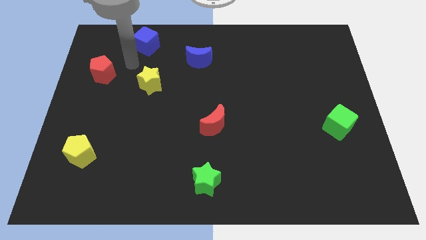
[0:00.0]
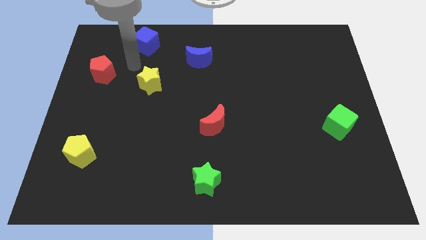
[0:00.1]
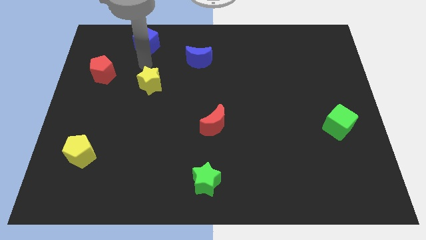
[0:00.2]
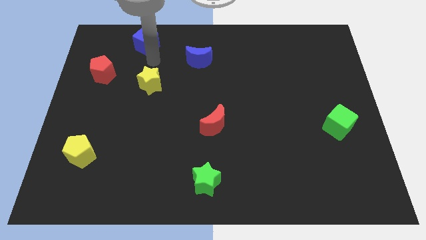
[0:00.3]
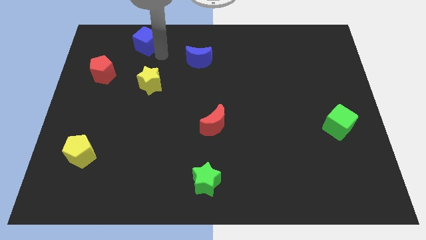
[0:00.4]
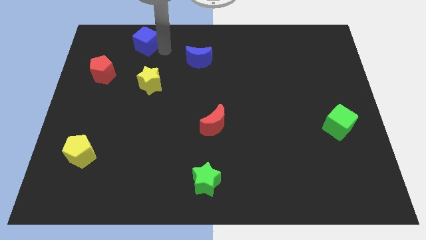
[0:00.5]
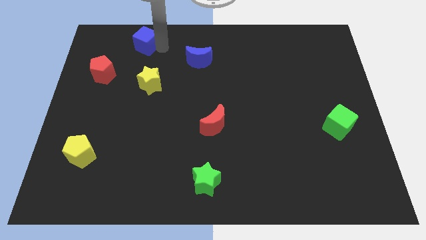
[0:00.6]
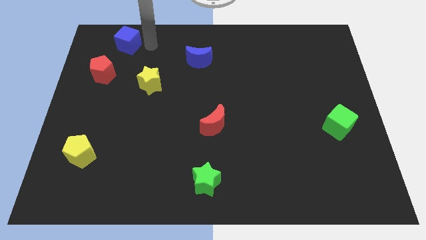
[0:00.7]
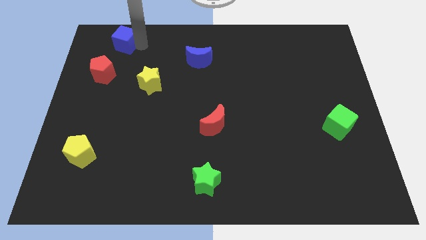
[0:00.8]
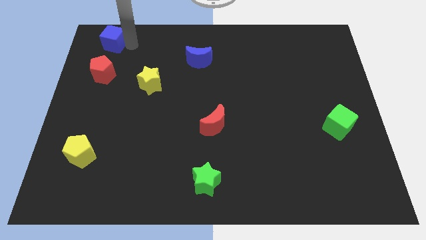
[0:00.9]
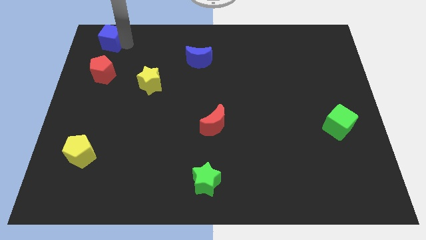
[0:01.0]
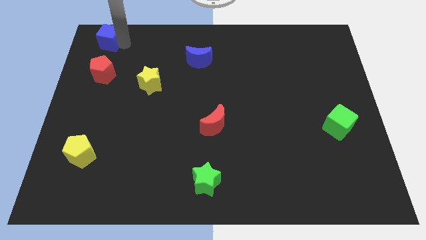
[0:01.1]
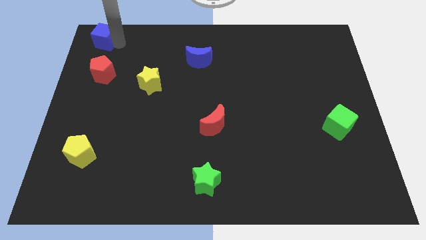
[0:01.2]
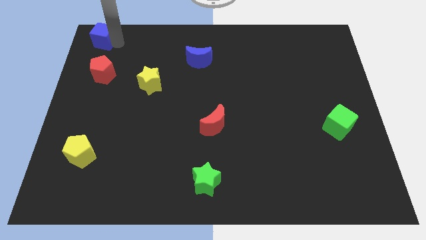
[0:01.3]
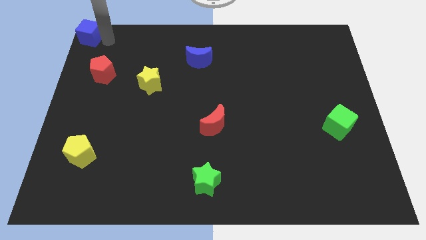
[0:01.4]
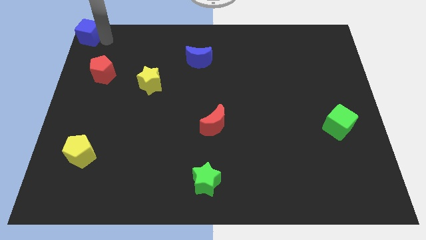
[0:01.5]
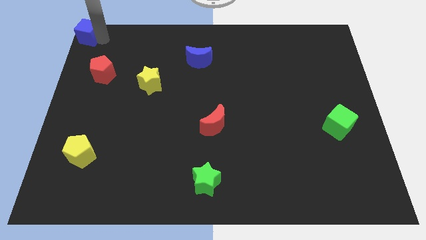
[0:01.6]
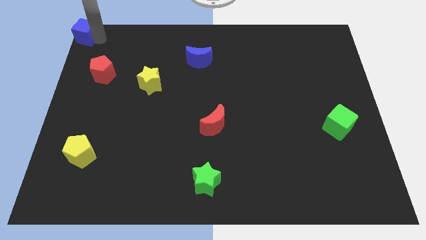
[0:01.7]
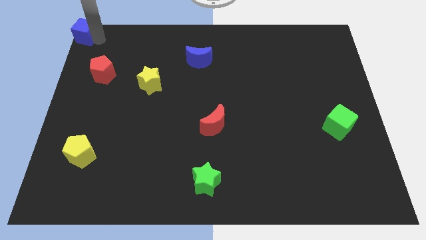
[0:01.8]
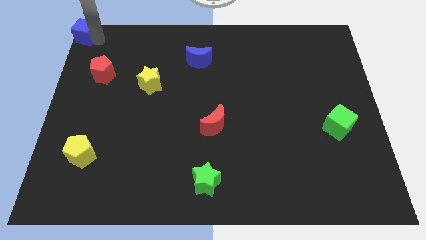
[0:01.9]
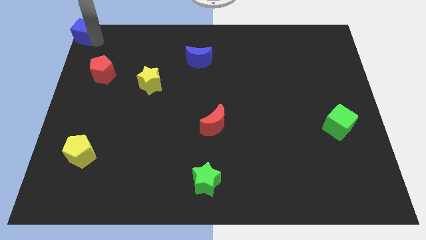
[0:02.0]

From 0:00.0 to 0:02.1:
slide blue cube to the top left

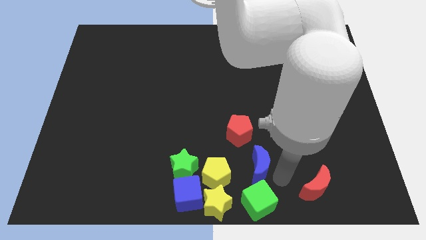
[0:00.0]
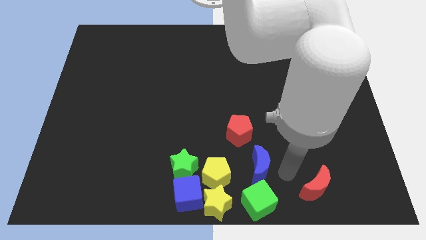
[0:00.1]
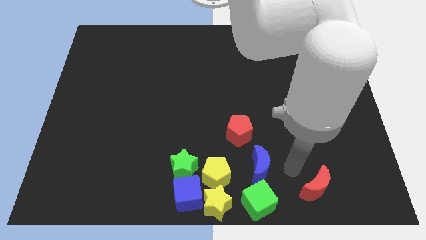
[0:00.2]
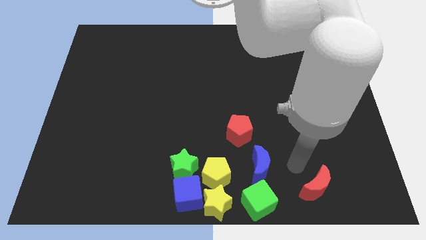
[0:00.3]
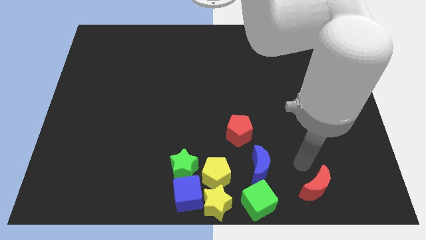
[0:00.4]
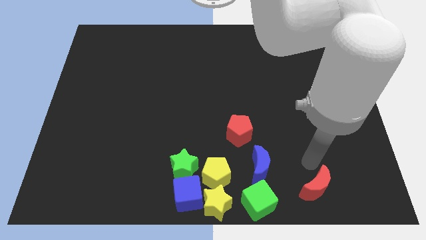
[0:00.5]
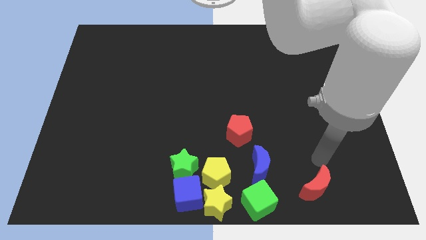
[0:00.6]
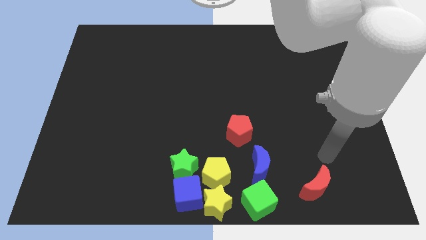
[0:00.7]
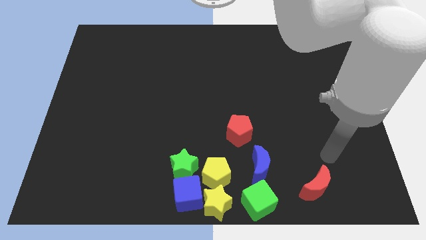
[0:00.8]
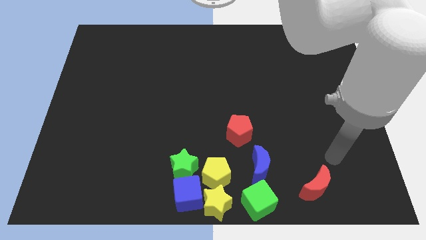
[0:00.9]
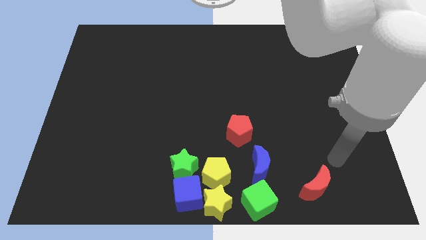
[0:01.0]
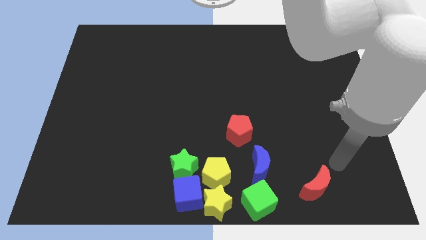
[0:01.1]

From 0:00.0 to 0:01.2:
move the arm away from green cube

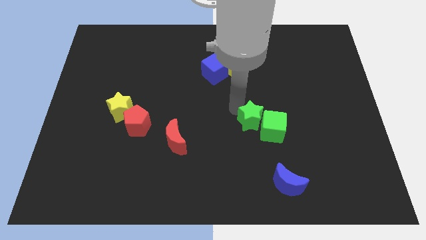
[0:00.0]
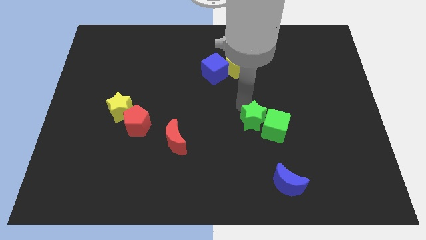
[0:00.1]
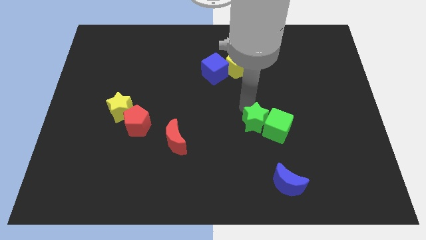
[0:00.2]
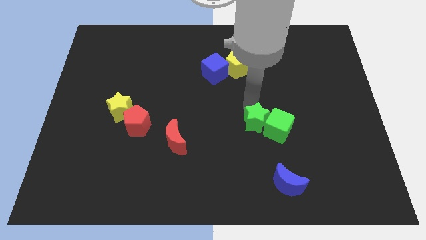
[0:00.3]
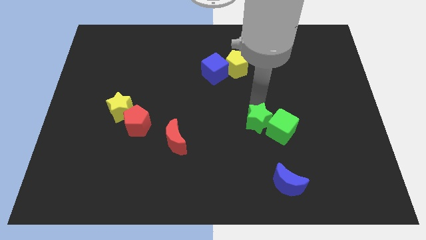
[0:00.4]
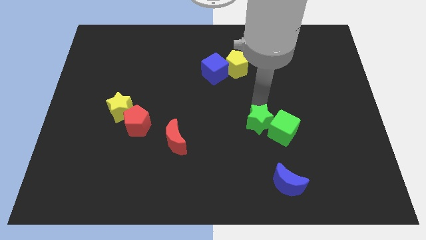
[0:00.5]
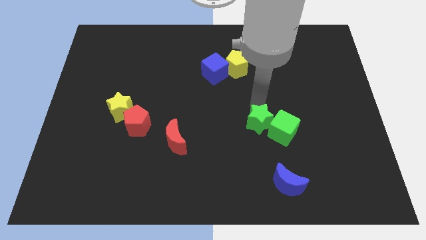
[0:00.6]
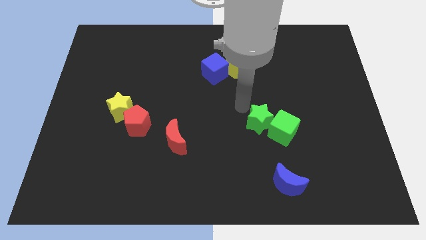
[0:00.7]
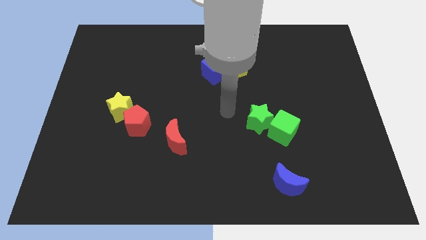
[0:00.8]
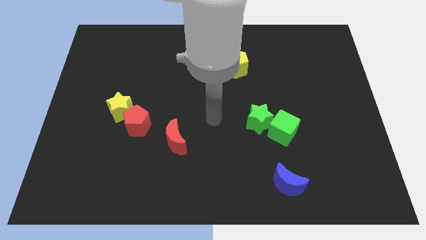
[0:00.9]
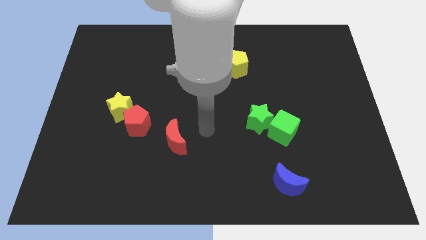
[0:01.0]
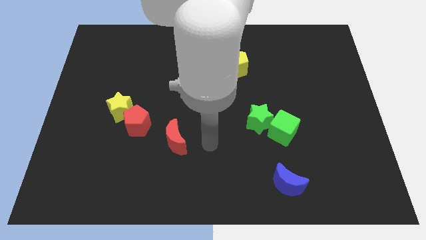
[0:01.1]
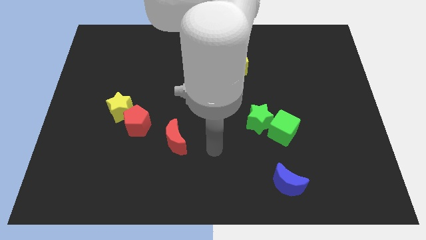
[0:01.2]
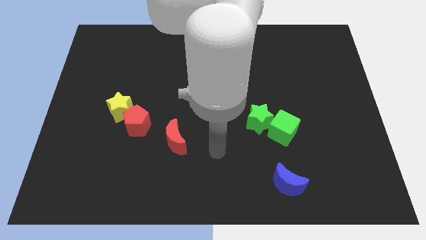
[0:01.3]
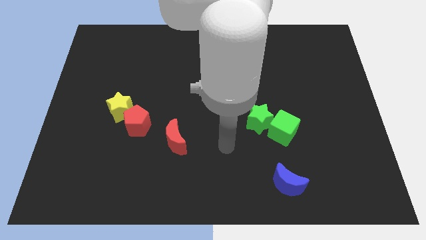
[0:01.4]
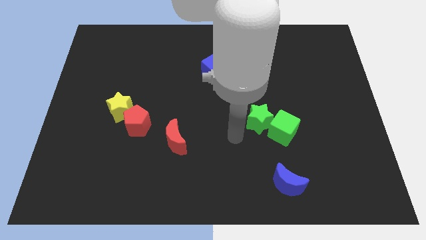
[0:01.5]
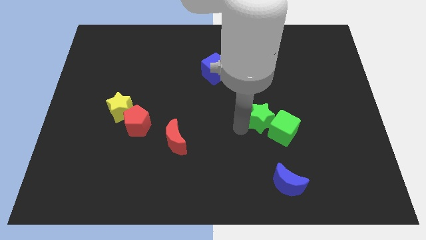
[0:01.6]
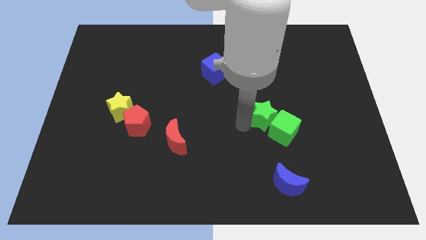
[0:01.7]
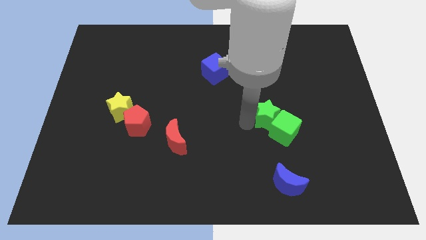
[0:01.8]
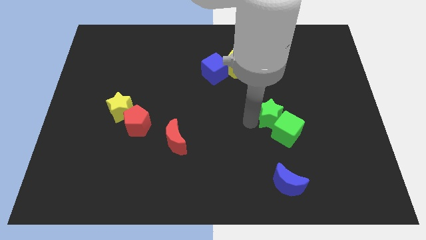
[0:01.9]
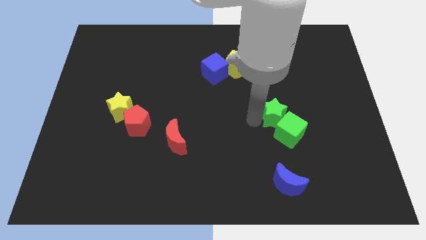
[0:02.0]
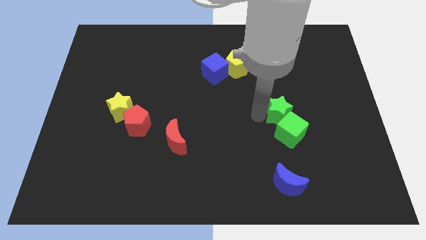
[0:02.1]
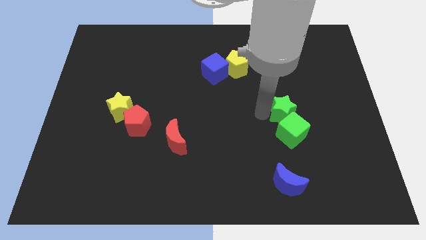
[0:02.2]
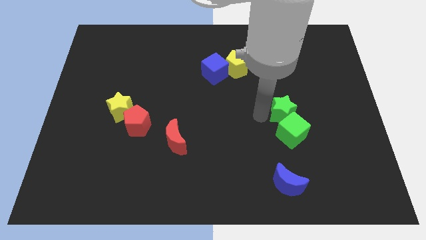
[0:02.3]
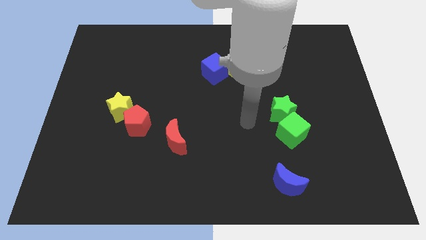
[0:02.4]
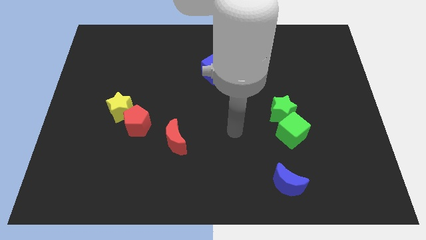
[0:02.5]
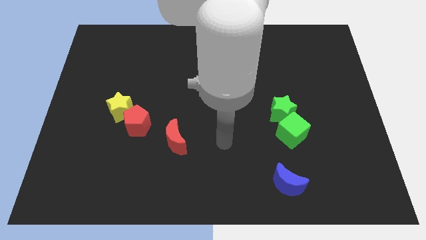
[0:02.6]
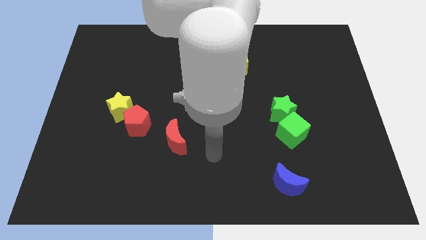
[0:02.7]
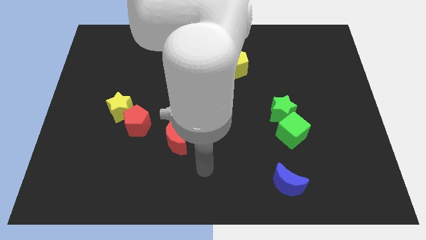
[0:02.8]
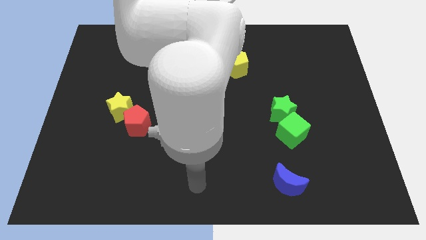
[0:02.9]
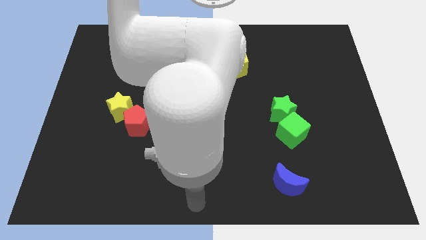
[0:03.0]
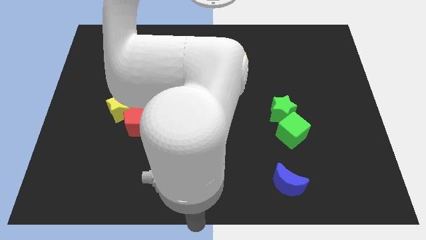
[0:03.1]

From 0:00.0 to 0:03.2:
slightly push the green blocks towards the right of the board

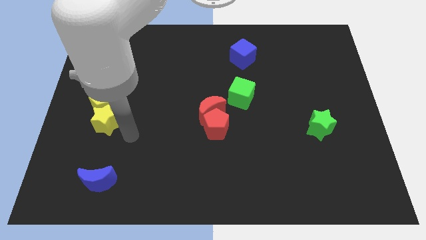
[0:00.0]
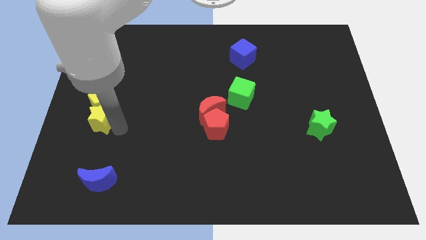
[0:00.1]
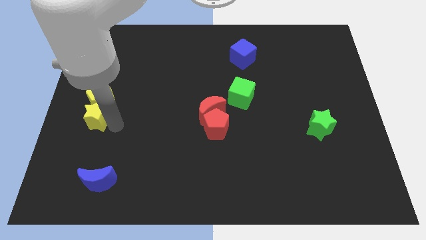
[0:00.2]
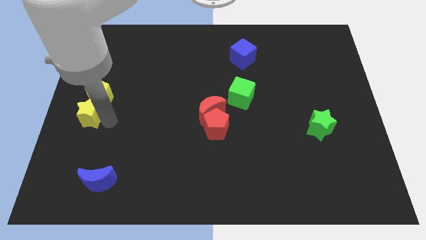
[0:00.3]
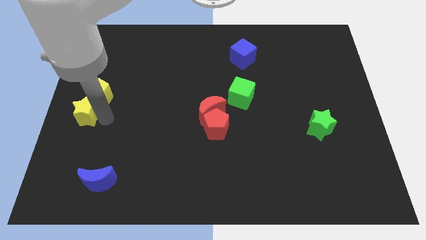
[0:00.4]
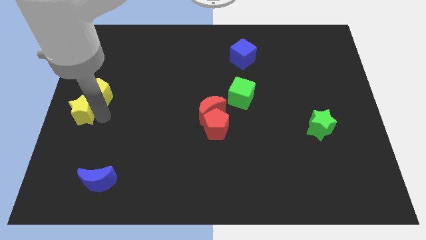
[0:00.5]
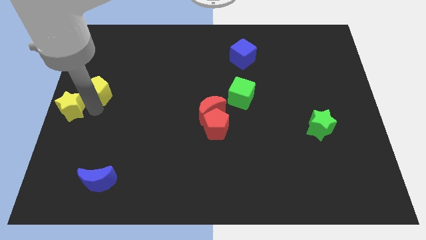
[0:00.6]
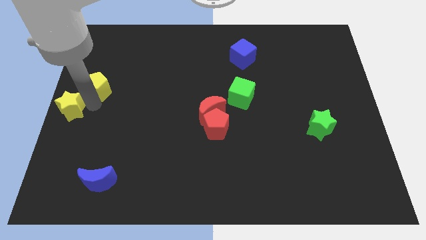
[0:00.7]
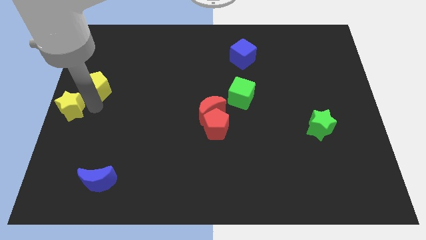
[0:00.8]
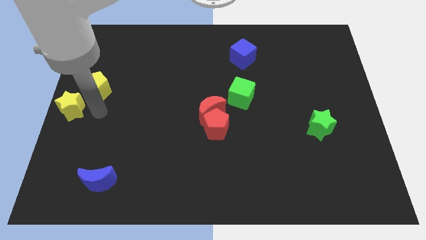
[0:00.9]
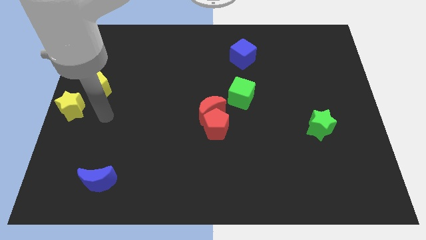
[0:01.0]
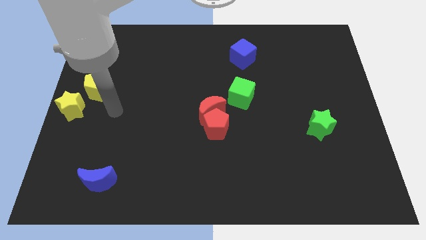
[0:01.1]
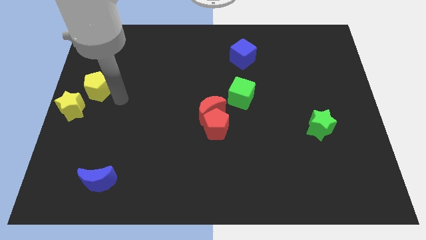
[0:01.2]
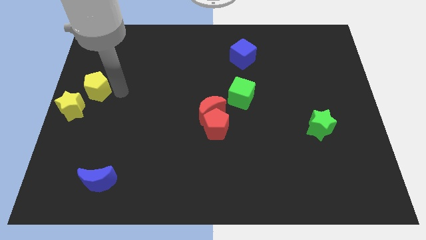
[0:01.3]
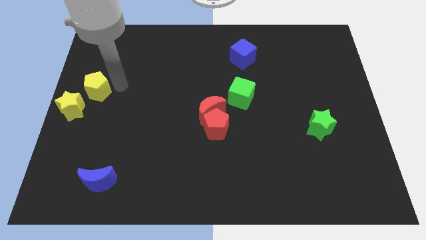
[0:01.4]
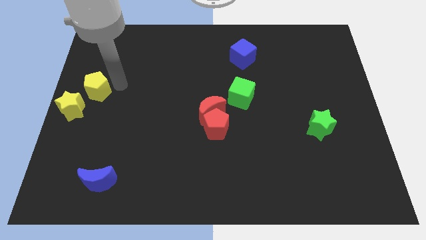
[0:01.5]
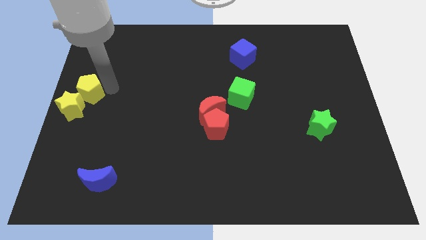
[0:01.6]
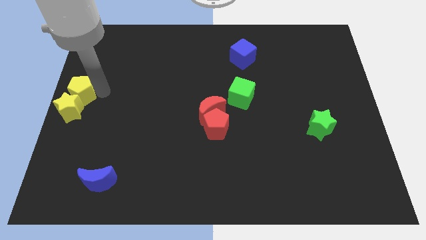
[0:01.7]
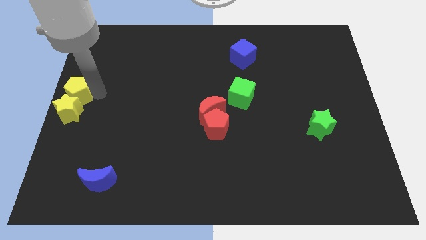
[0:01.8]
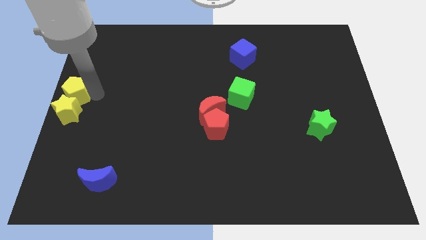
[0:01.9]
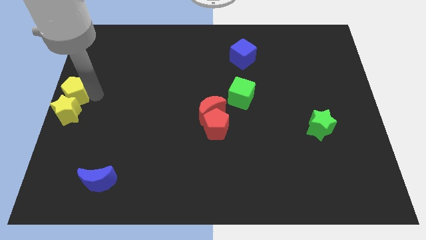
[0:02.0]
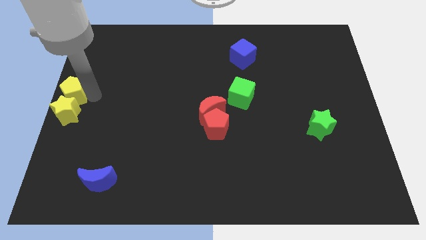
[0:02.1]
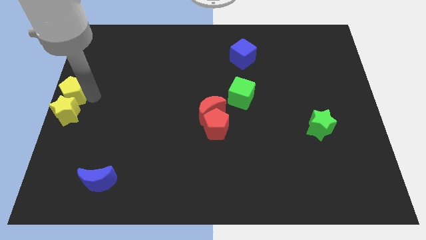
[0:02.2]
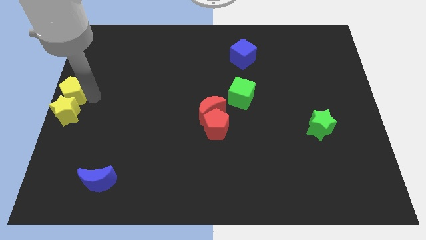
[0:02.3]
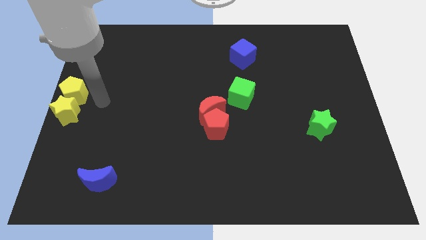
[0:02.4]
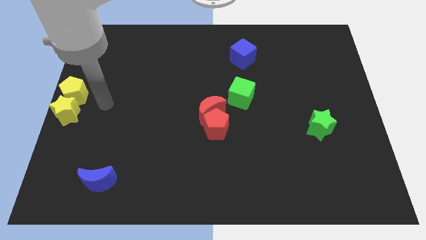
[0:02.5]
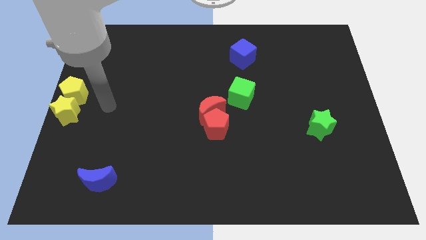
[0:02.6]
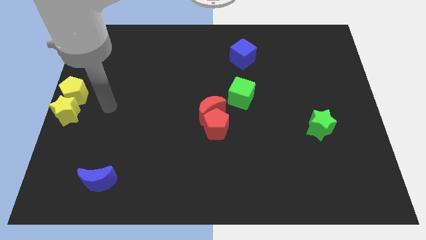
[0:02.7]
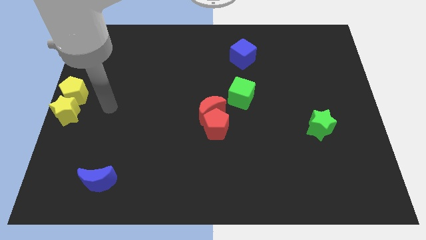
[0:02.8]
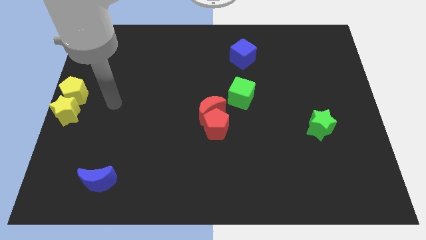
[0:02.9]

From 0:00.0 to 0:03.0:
push the yellow star and yellow pentagon to the left
